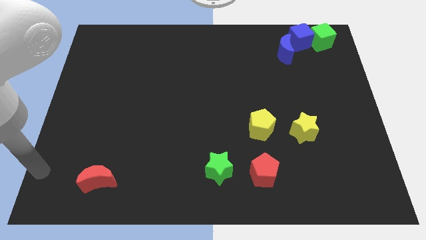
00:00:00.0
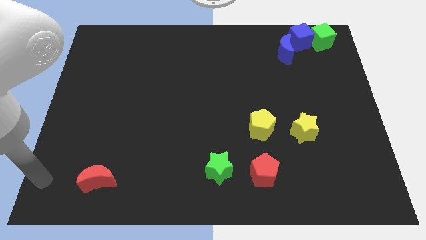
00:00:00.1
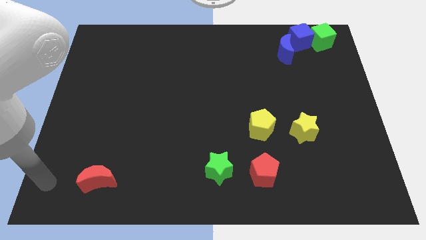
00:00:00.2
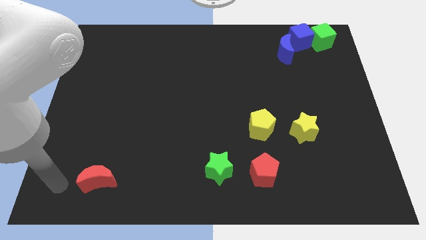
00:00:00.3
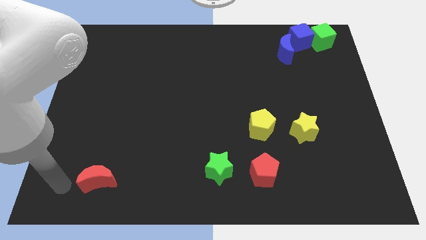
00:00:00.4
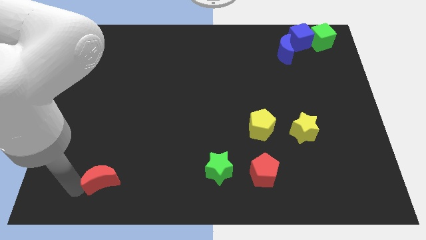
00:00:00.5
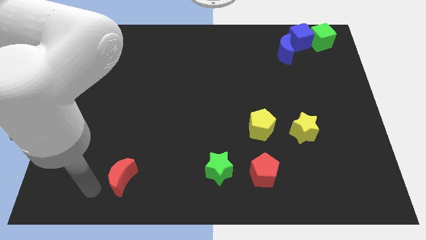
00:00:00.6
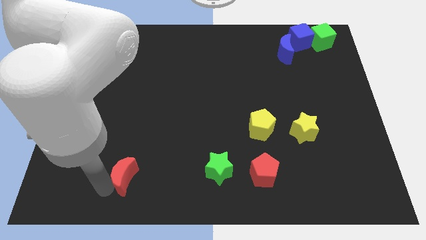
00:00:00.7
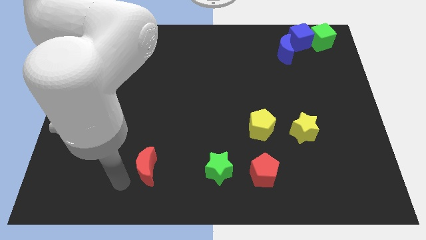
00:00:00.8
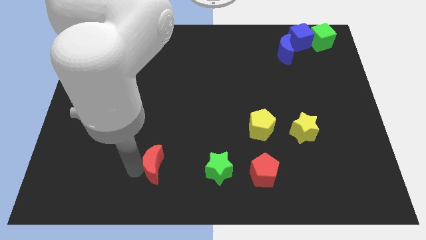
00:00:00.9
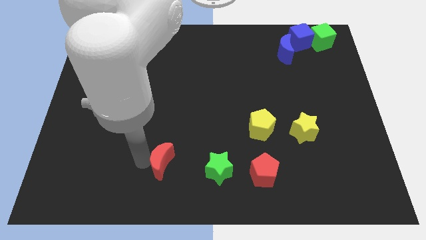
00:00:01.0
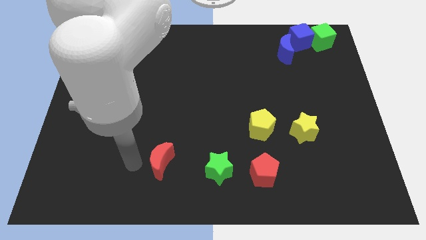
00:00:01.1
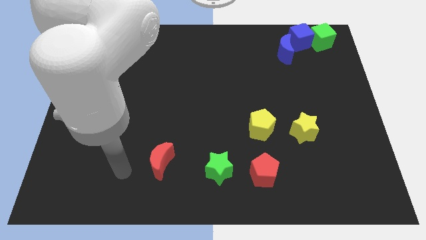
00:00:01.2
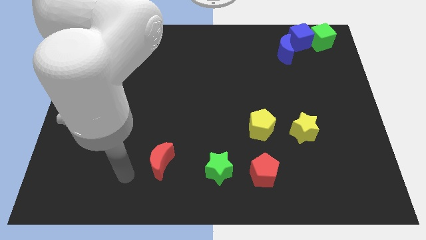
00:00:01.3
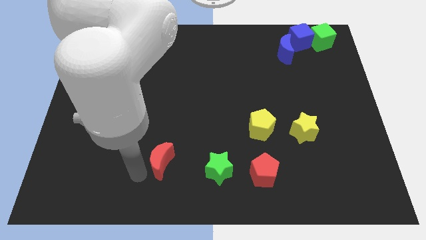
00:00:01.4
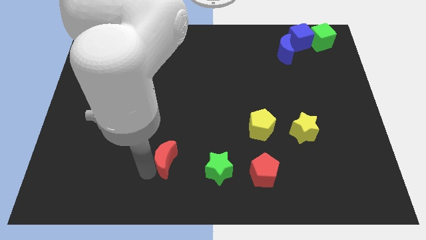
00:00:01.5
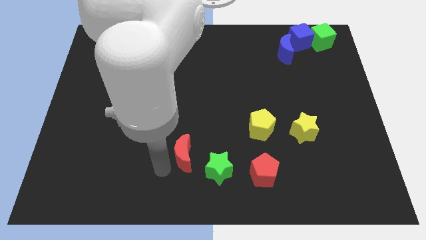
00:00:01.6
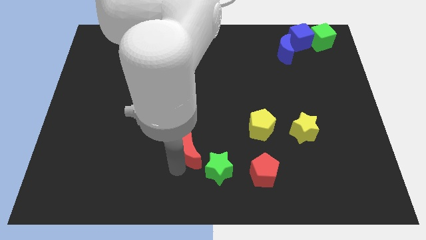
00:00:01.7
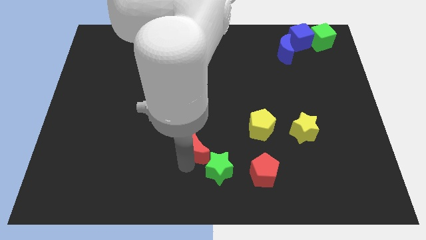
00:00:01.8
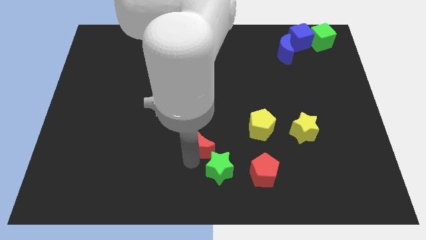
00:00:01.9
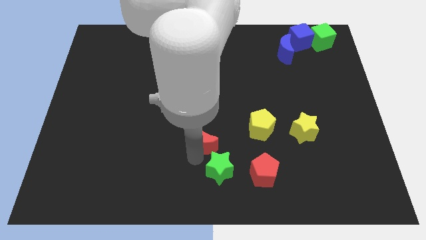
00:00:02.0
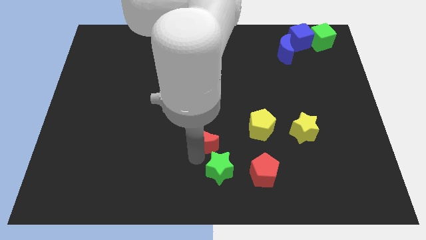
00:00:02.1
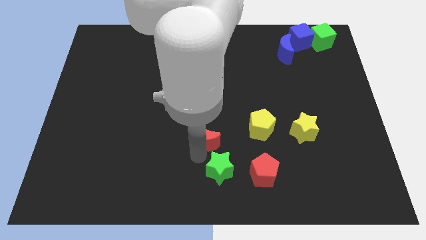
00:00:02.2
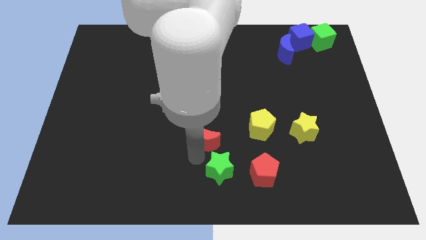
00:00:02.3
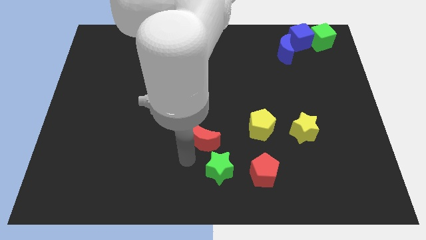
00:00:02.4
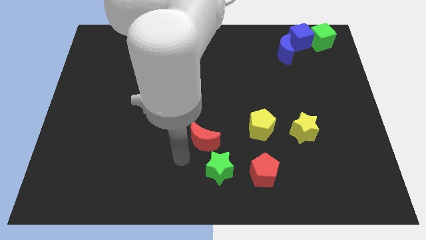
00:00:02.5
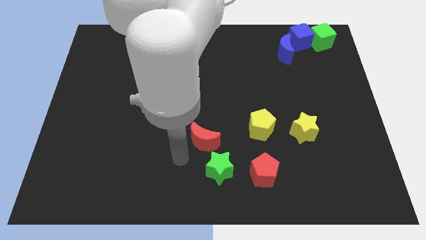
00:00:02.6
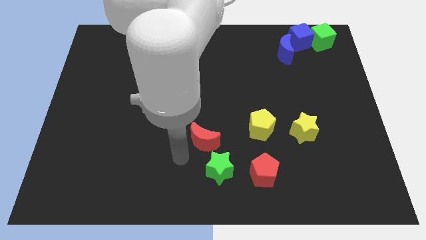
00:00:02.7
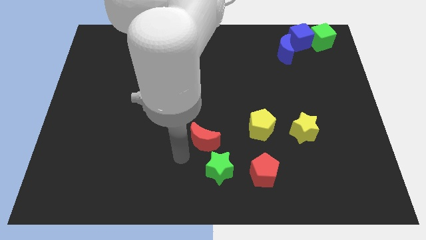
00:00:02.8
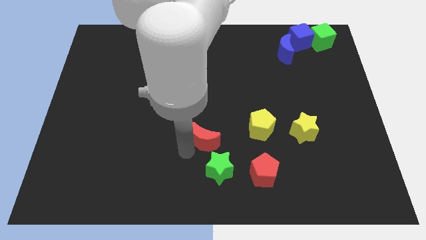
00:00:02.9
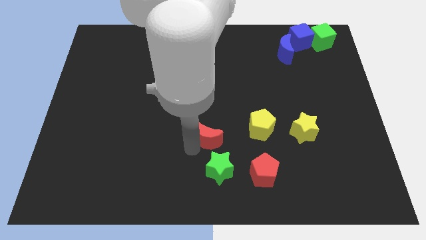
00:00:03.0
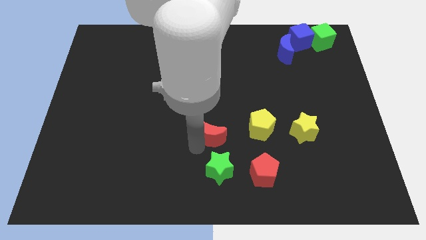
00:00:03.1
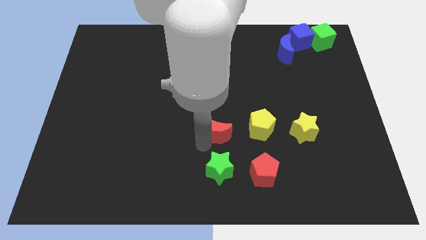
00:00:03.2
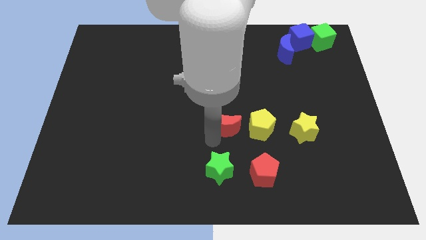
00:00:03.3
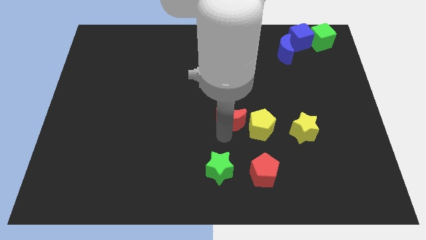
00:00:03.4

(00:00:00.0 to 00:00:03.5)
place the red moon to the left of the yellow pentagon

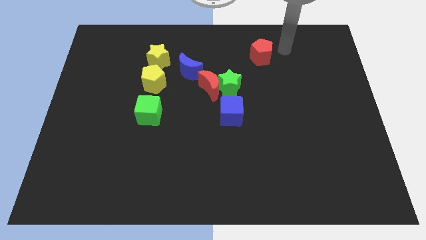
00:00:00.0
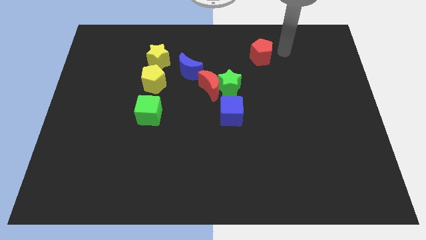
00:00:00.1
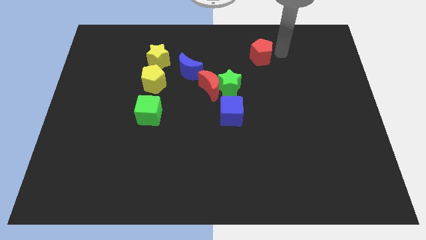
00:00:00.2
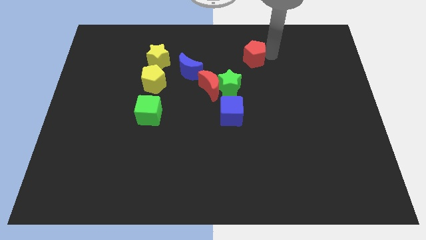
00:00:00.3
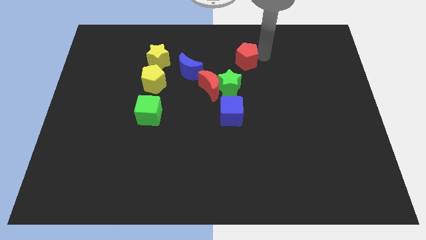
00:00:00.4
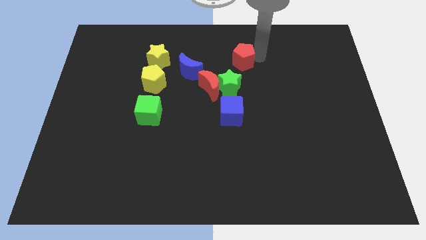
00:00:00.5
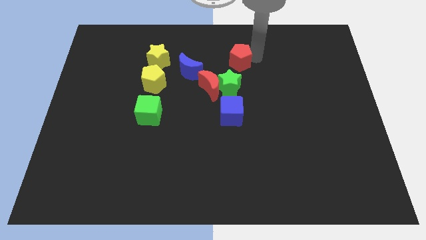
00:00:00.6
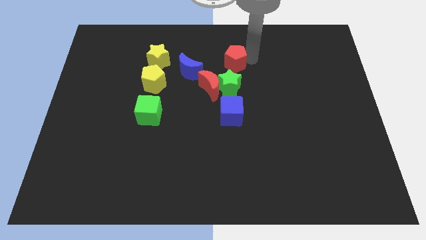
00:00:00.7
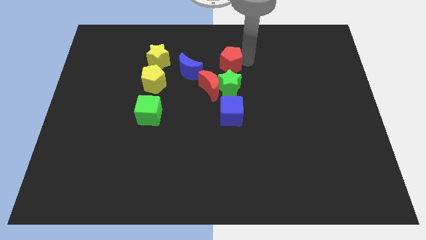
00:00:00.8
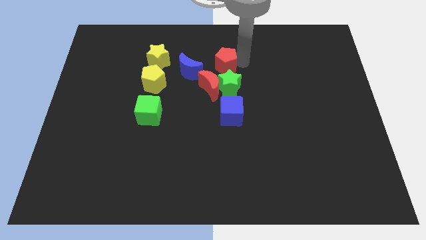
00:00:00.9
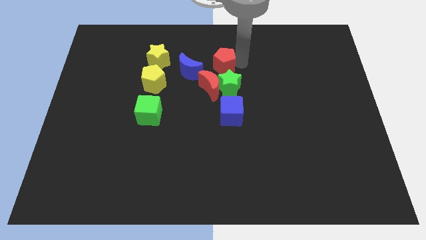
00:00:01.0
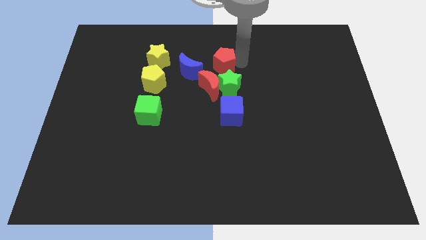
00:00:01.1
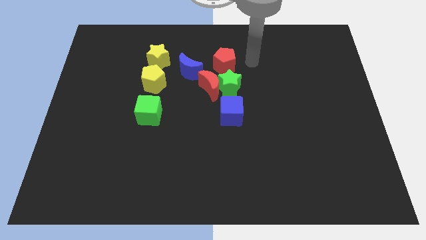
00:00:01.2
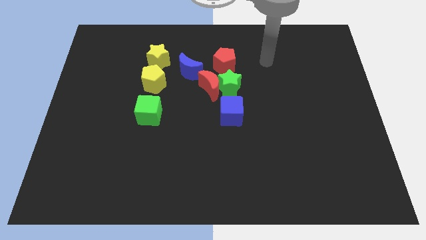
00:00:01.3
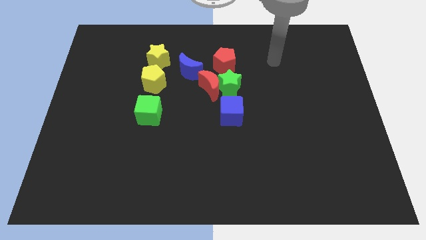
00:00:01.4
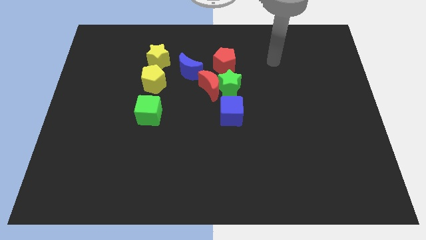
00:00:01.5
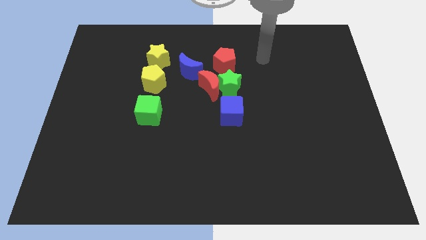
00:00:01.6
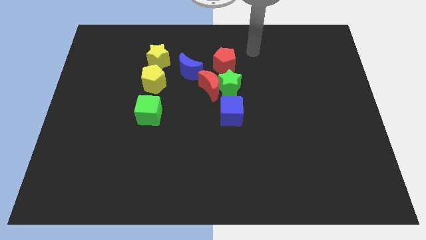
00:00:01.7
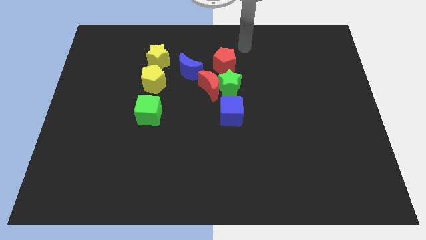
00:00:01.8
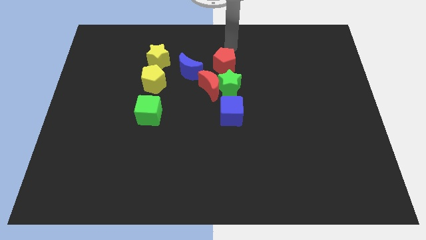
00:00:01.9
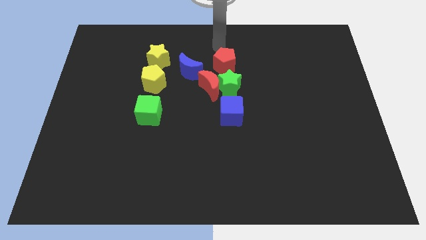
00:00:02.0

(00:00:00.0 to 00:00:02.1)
move red pentagon towards the green star

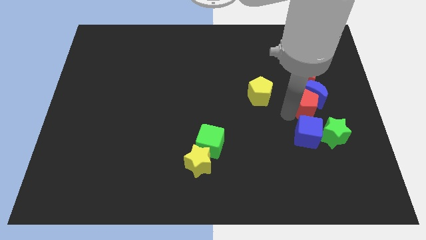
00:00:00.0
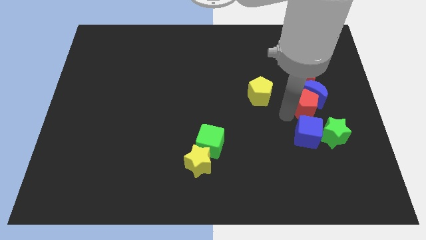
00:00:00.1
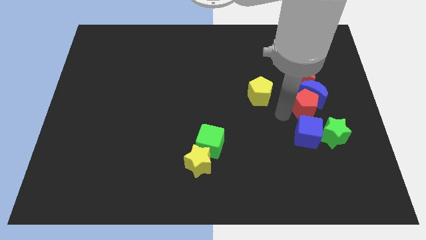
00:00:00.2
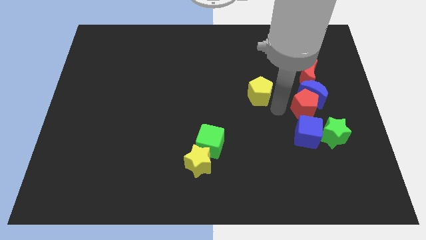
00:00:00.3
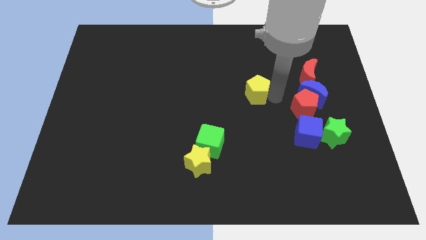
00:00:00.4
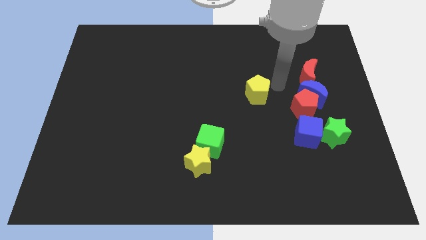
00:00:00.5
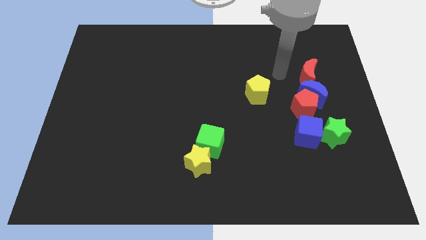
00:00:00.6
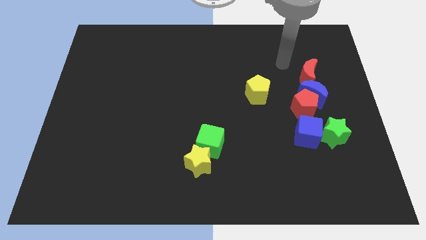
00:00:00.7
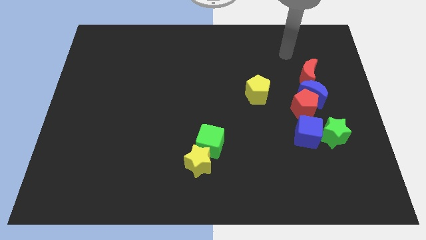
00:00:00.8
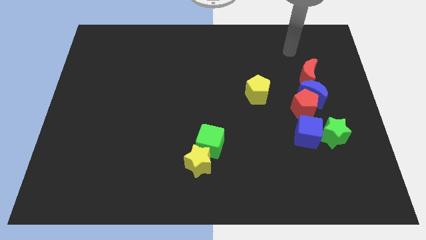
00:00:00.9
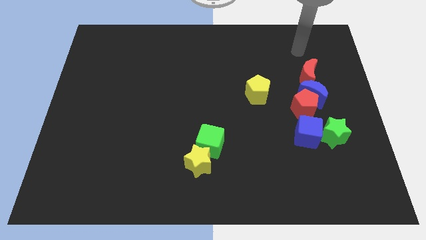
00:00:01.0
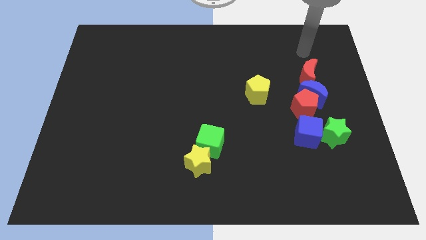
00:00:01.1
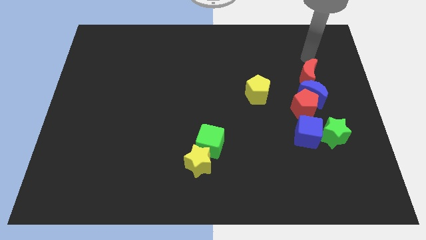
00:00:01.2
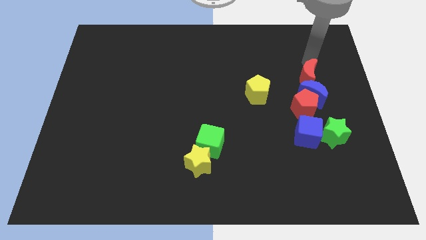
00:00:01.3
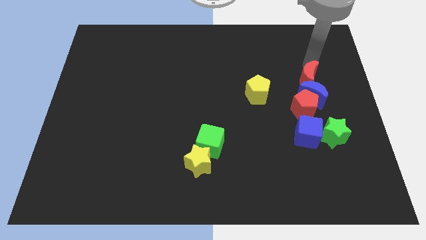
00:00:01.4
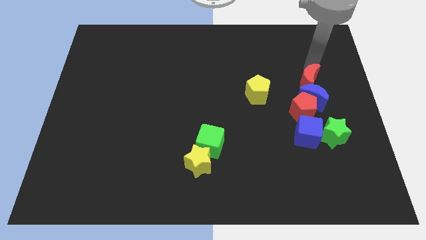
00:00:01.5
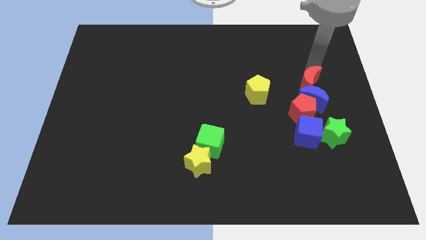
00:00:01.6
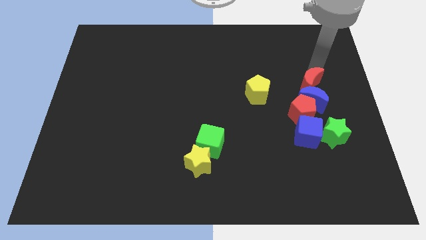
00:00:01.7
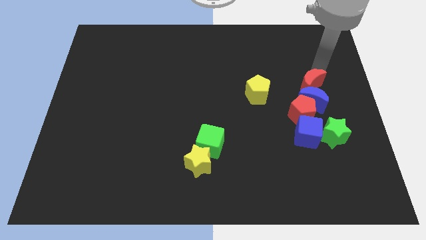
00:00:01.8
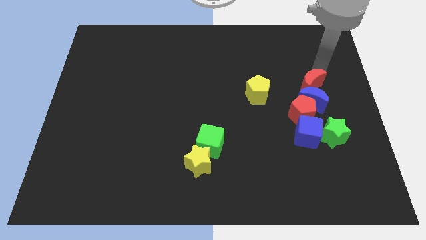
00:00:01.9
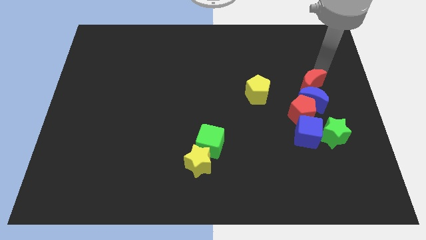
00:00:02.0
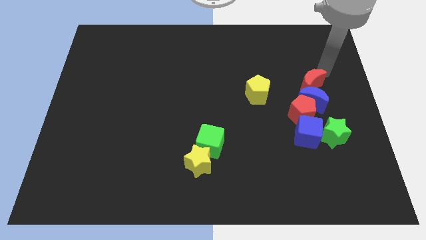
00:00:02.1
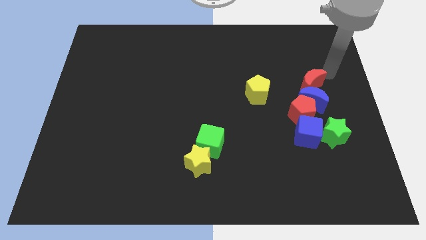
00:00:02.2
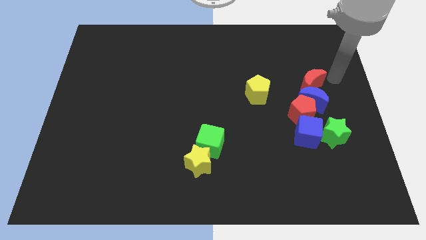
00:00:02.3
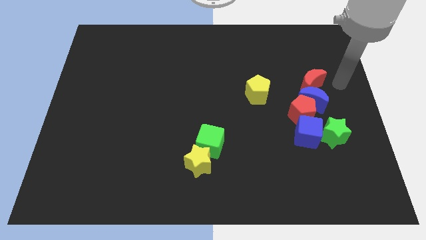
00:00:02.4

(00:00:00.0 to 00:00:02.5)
slightly push the red crescent towards bottom side

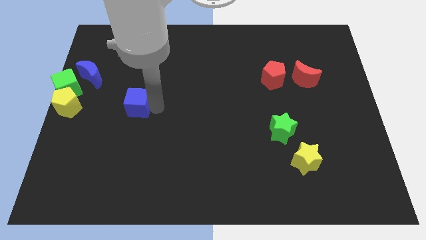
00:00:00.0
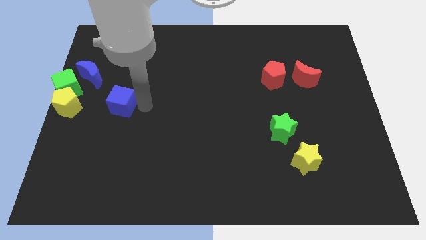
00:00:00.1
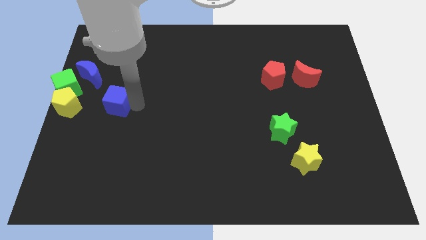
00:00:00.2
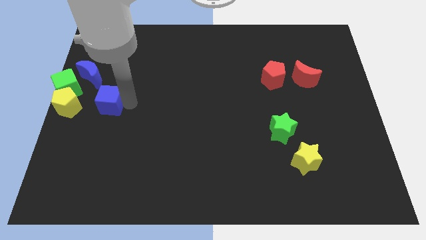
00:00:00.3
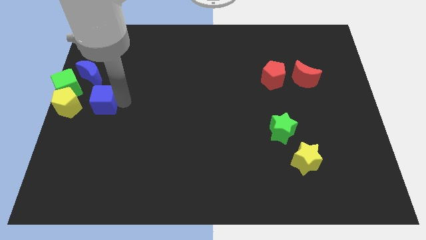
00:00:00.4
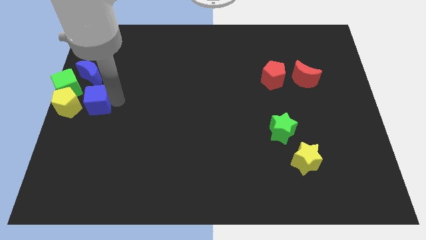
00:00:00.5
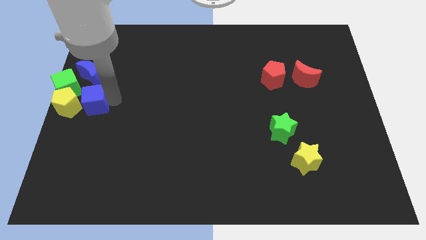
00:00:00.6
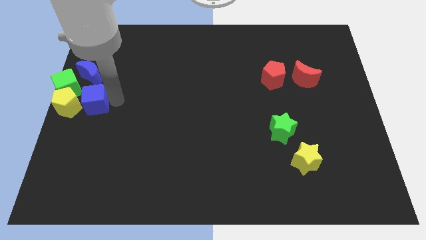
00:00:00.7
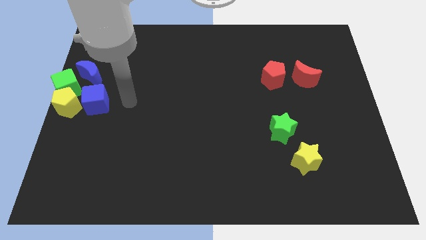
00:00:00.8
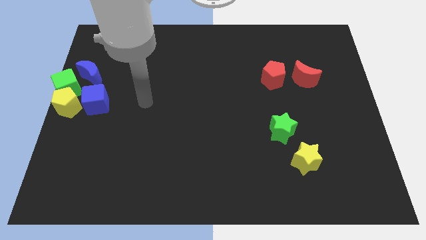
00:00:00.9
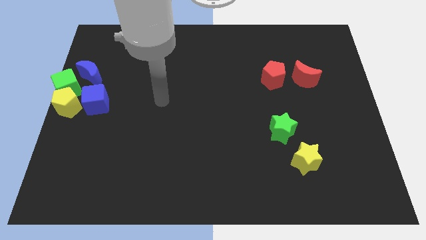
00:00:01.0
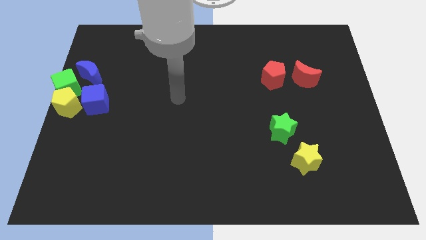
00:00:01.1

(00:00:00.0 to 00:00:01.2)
put the blue cube on the right side of the yellow pentagon
